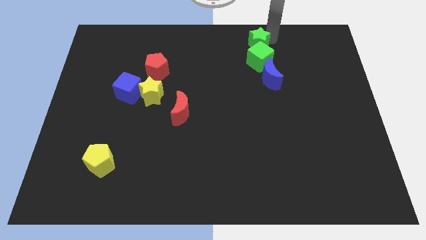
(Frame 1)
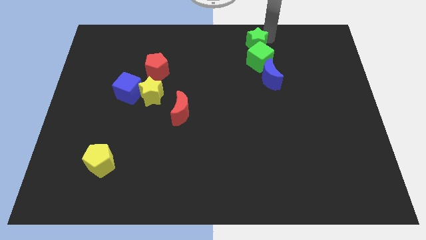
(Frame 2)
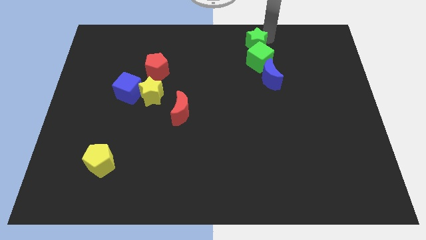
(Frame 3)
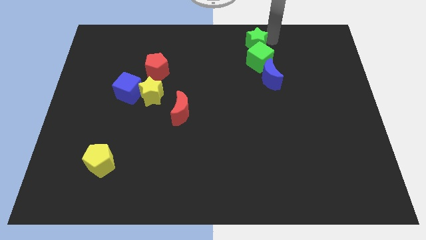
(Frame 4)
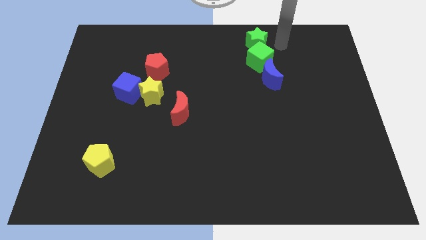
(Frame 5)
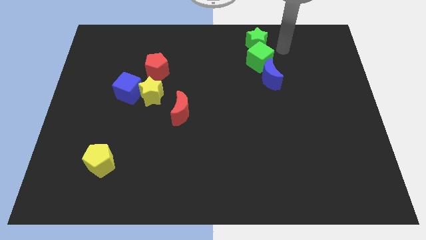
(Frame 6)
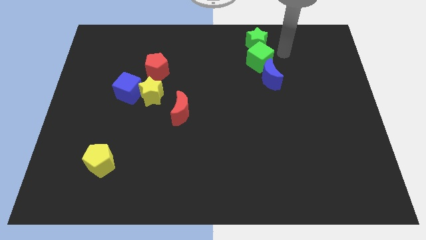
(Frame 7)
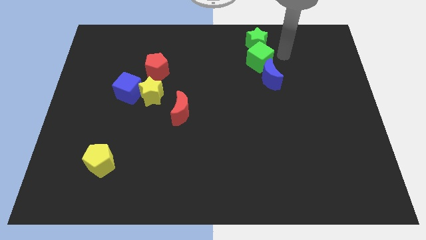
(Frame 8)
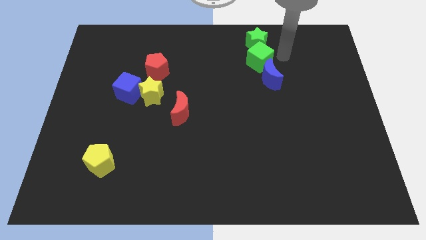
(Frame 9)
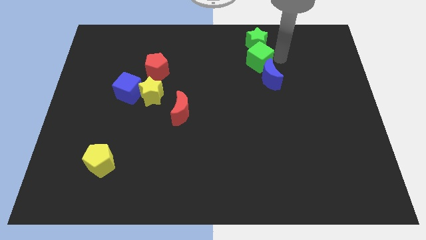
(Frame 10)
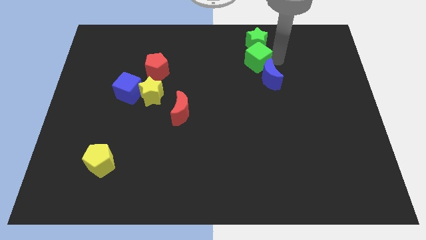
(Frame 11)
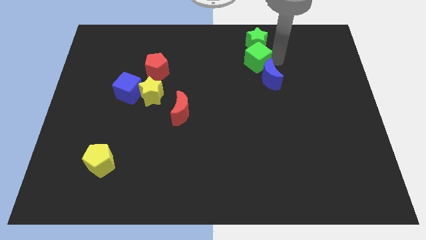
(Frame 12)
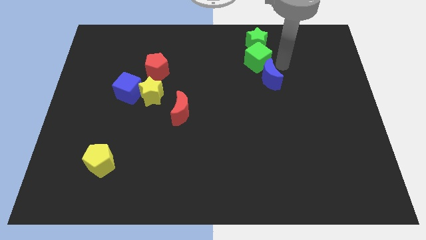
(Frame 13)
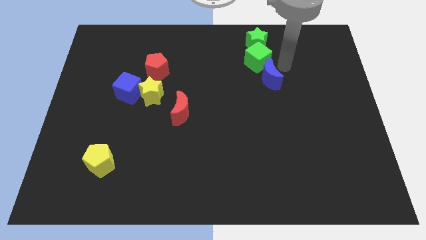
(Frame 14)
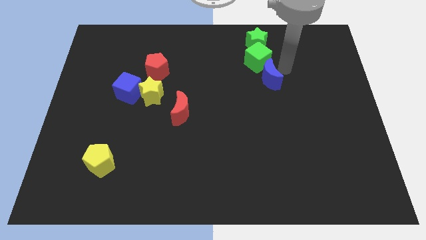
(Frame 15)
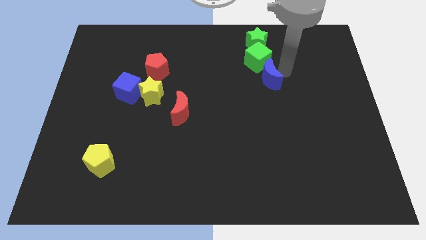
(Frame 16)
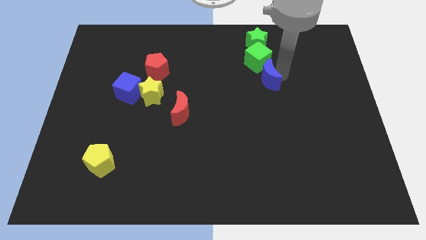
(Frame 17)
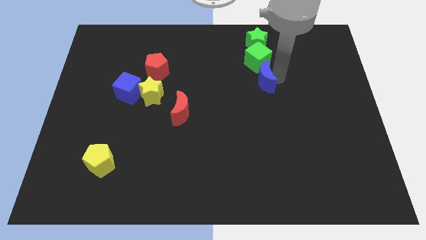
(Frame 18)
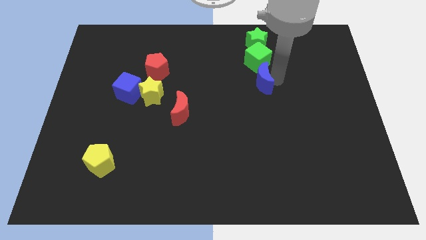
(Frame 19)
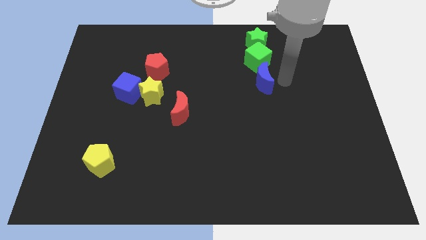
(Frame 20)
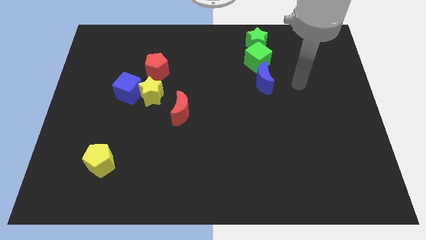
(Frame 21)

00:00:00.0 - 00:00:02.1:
make a vertical line with green blocks and blue moon

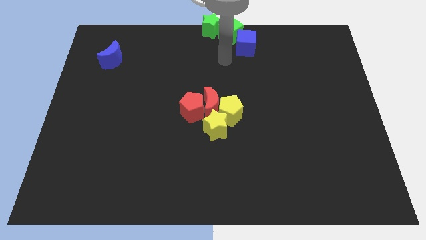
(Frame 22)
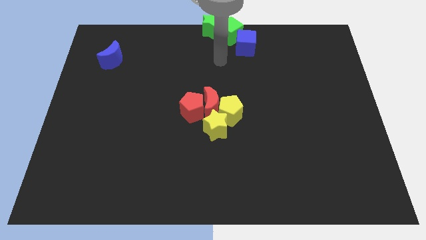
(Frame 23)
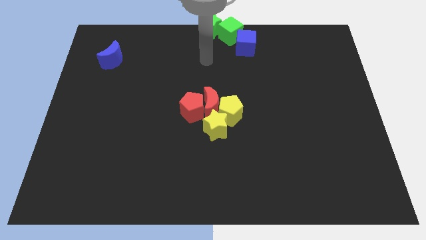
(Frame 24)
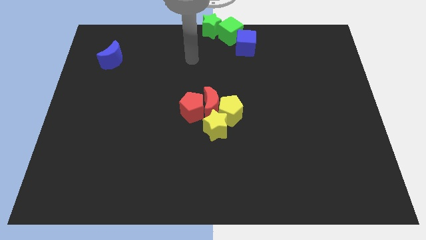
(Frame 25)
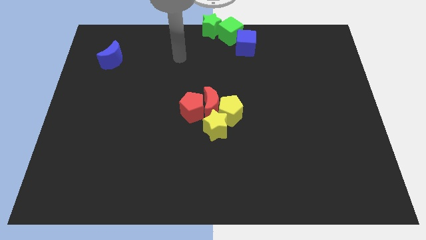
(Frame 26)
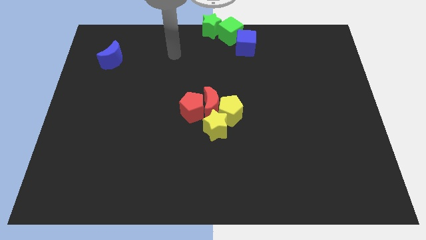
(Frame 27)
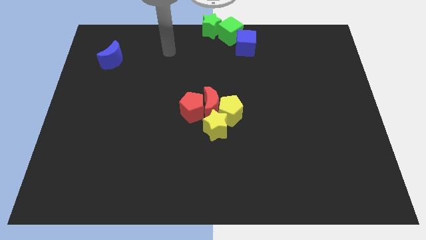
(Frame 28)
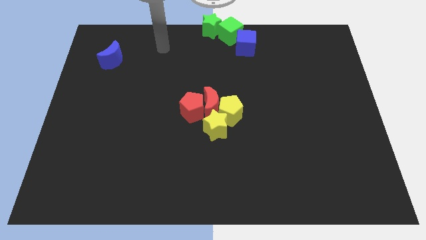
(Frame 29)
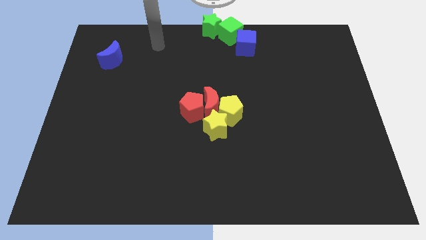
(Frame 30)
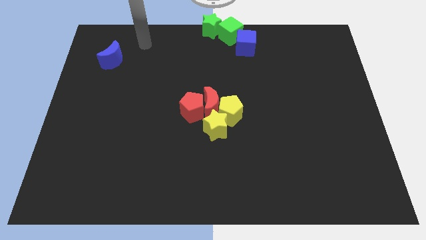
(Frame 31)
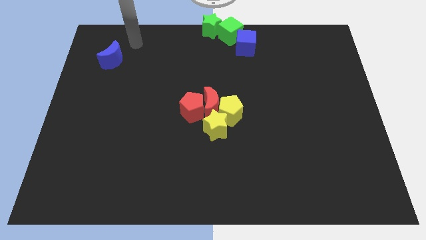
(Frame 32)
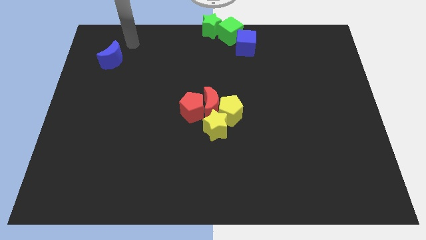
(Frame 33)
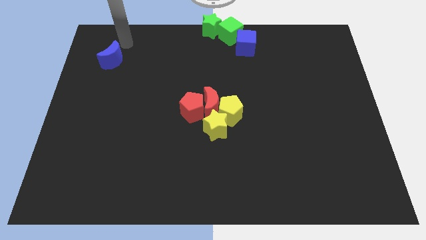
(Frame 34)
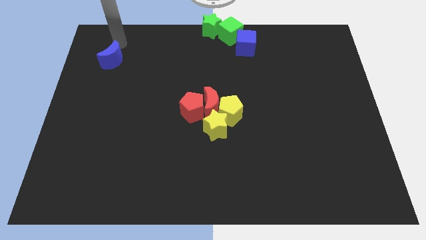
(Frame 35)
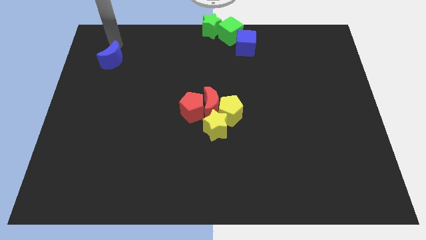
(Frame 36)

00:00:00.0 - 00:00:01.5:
move your arm above the blue crescent

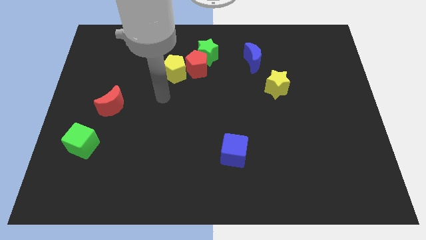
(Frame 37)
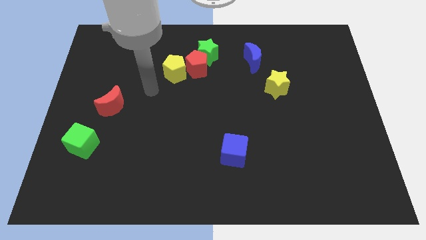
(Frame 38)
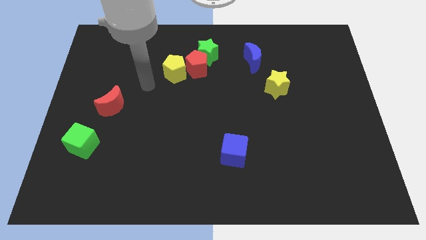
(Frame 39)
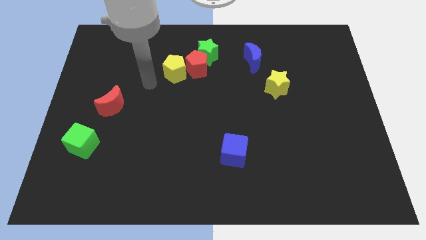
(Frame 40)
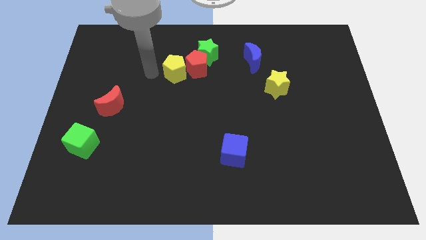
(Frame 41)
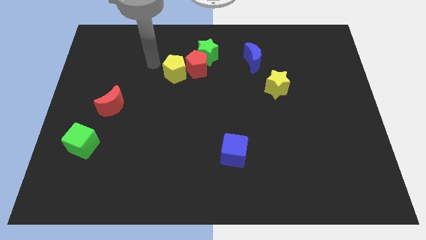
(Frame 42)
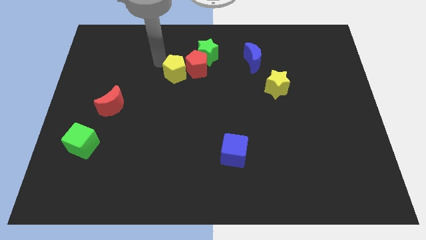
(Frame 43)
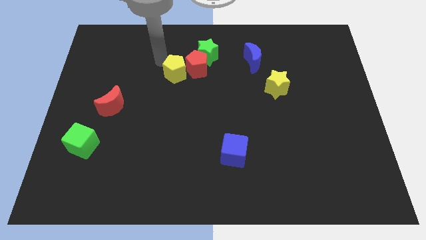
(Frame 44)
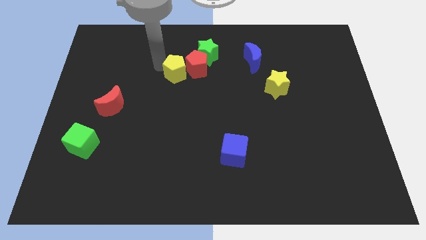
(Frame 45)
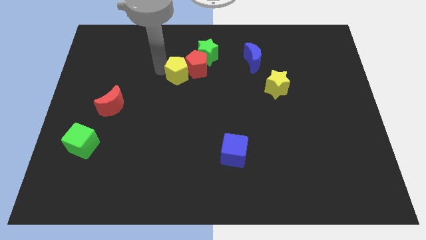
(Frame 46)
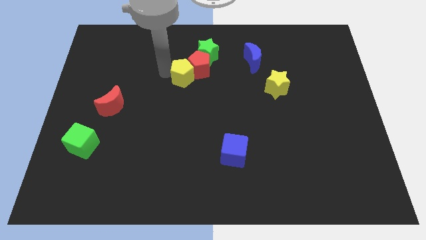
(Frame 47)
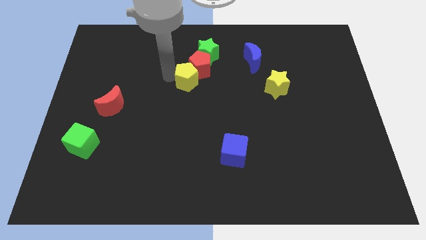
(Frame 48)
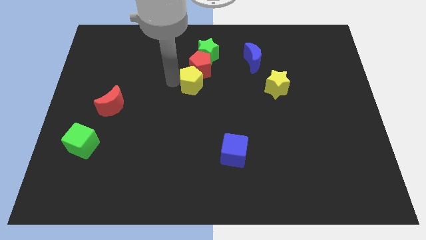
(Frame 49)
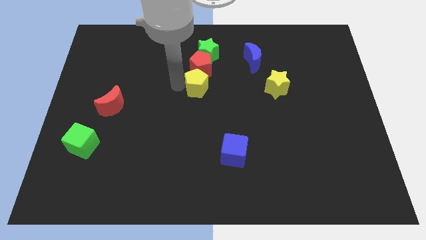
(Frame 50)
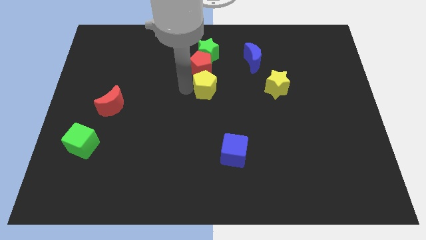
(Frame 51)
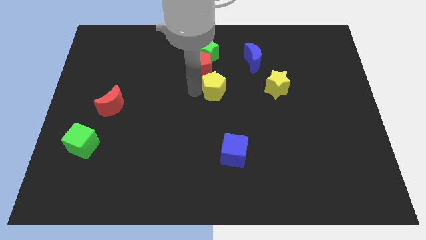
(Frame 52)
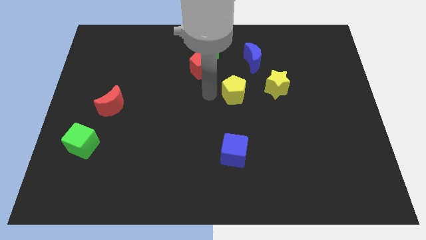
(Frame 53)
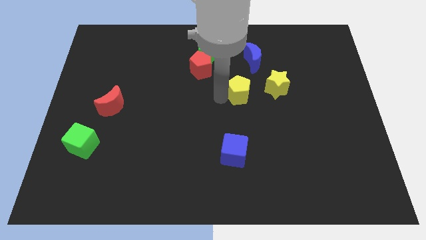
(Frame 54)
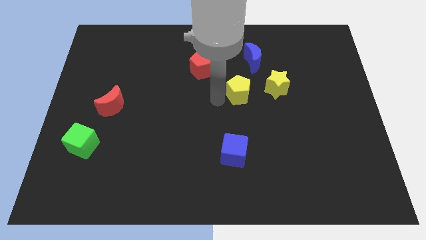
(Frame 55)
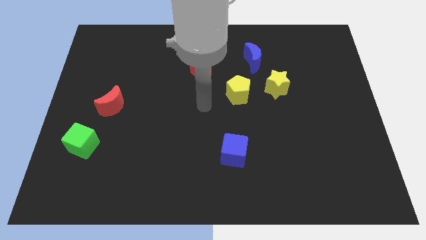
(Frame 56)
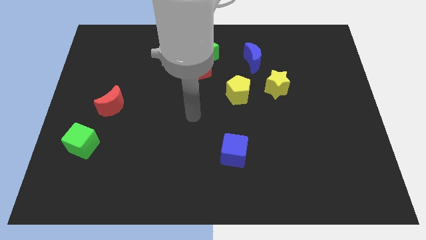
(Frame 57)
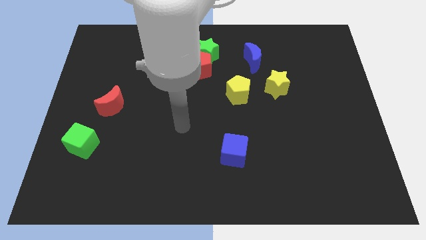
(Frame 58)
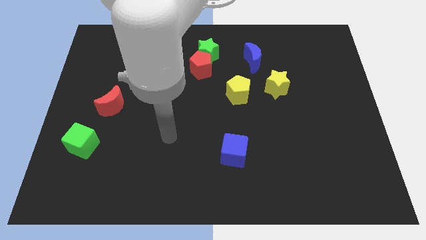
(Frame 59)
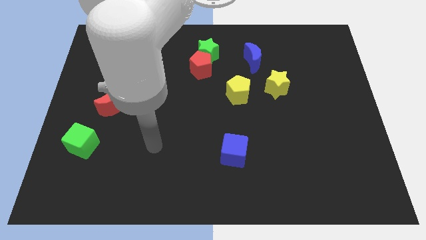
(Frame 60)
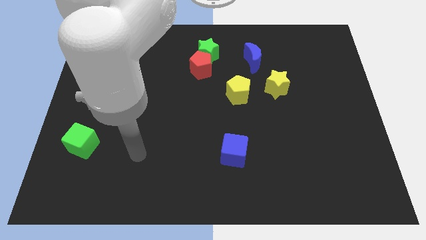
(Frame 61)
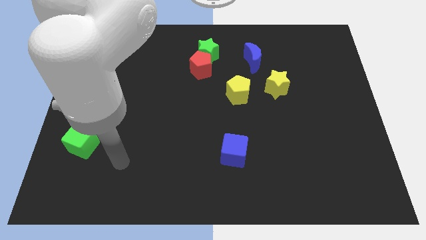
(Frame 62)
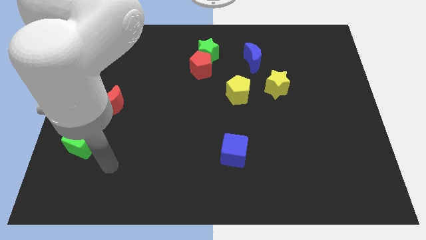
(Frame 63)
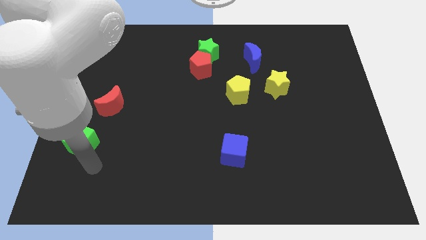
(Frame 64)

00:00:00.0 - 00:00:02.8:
move the yellow pentagon left to the yellow star

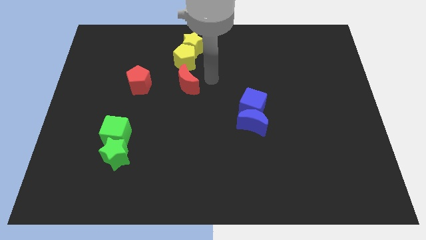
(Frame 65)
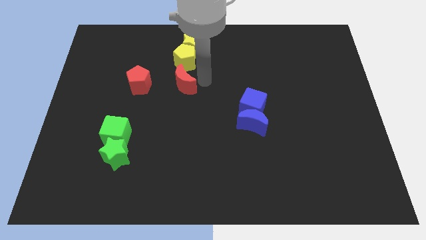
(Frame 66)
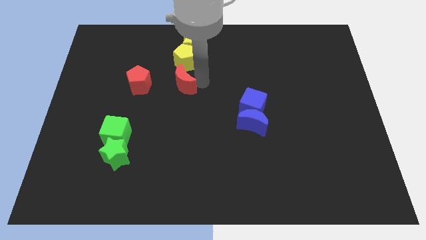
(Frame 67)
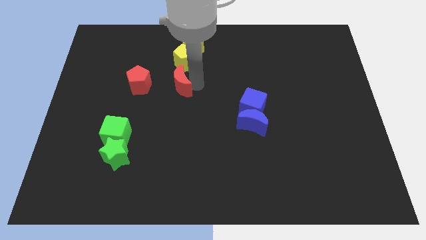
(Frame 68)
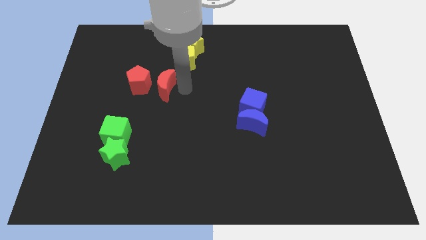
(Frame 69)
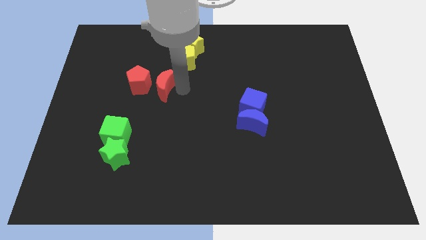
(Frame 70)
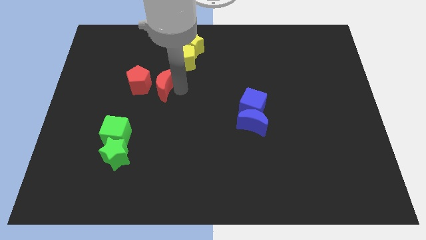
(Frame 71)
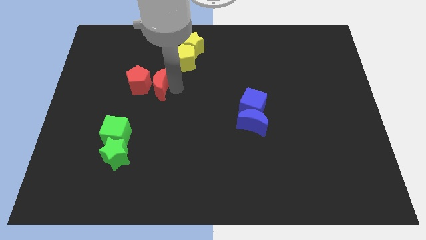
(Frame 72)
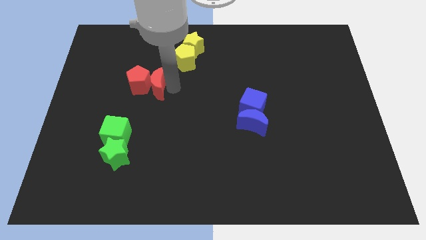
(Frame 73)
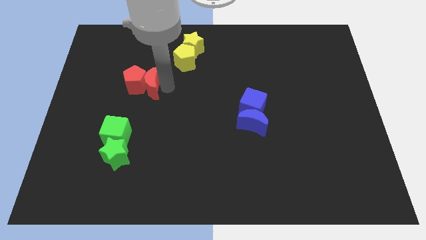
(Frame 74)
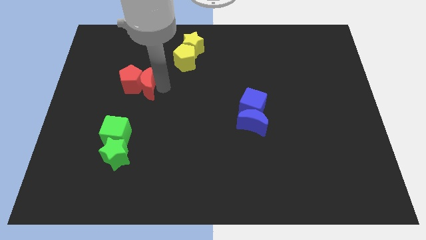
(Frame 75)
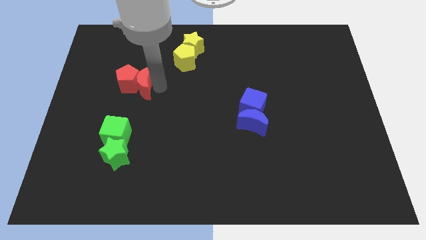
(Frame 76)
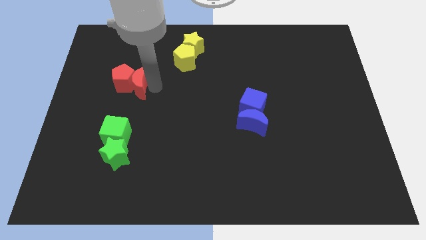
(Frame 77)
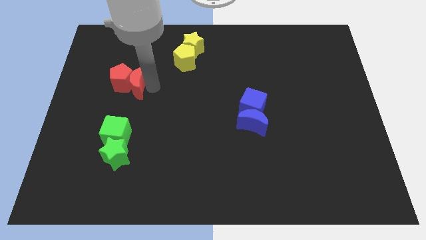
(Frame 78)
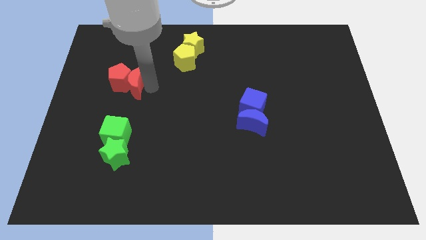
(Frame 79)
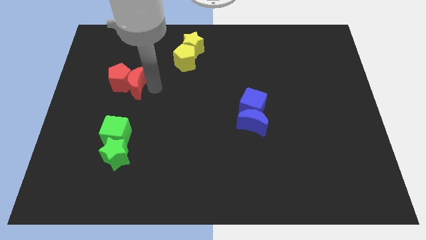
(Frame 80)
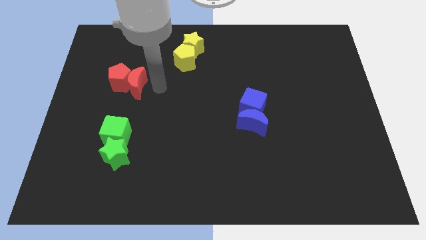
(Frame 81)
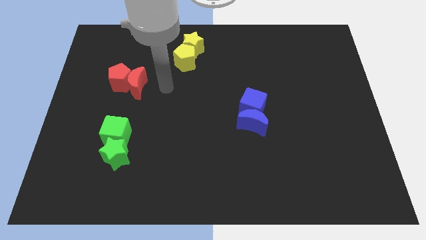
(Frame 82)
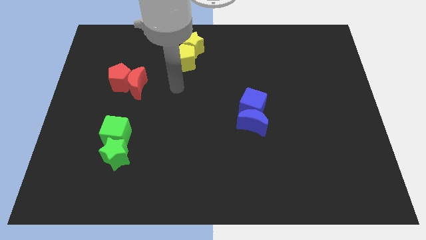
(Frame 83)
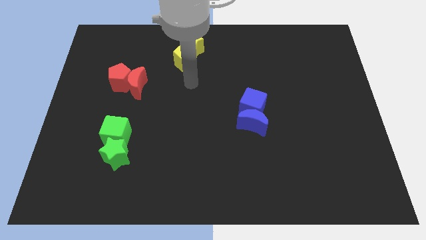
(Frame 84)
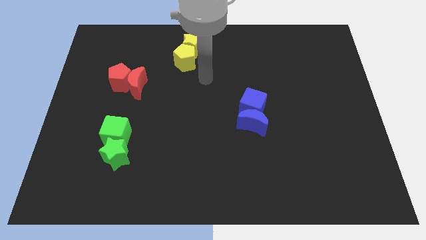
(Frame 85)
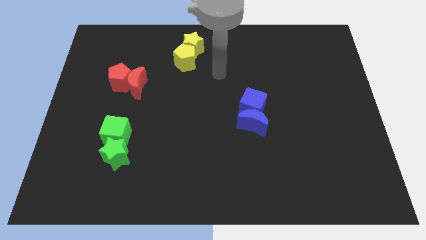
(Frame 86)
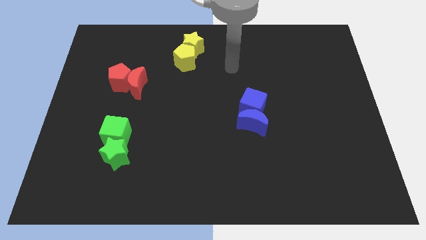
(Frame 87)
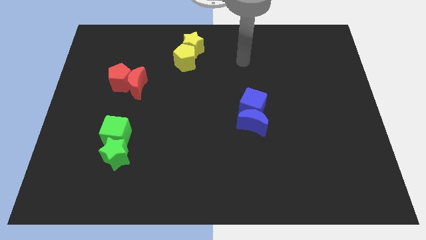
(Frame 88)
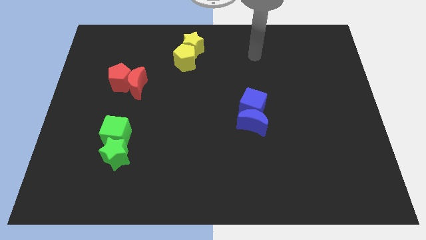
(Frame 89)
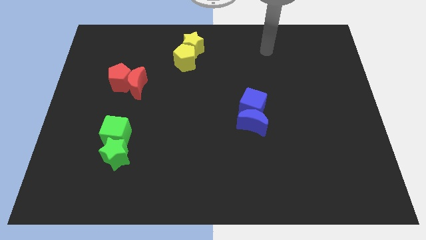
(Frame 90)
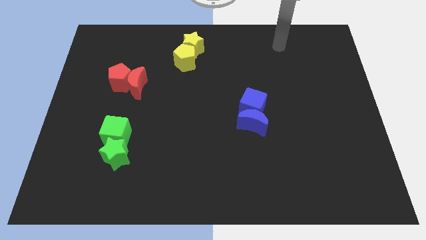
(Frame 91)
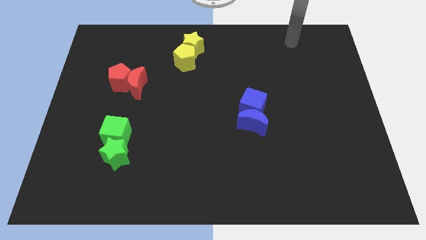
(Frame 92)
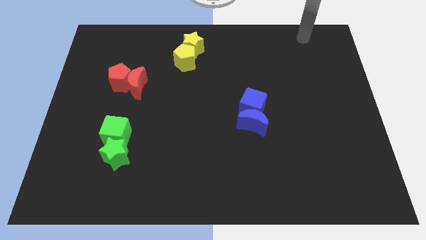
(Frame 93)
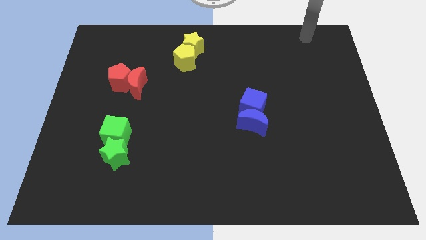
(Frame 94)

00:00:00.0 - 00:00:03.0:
move red moon and red pentagon towards left
